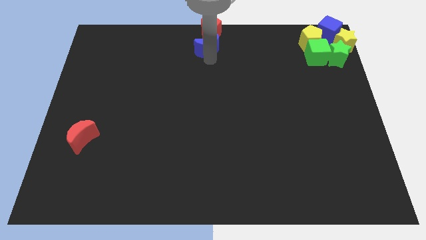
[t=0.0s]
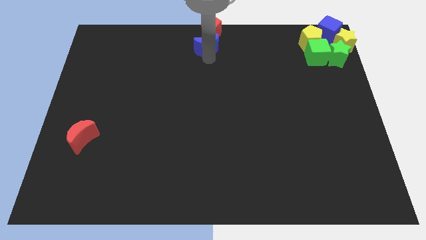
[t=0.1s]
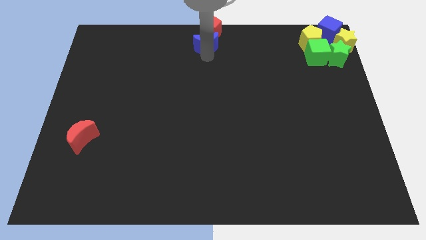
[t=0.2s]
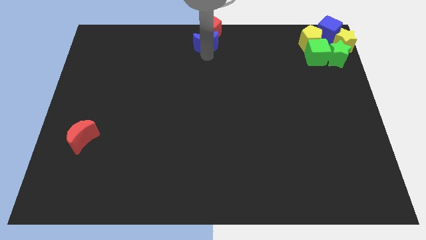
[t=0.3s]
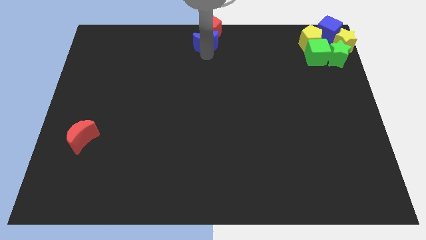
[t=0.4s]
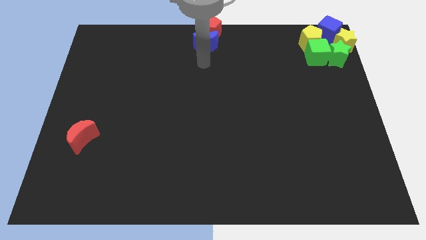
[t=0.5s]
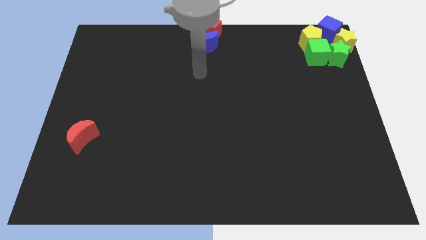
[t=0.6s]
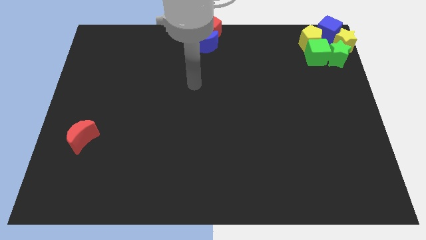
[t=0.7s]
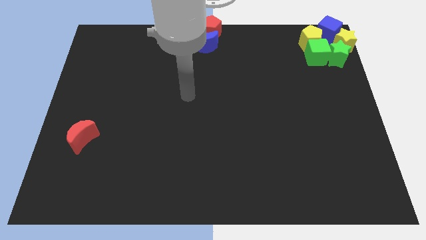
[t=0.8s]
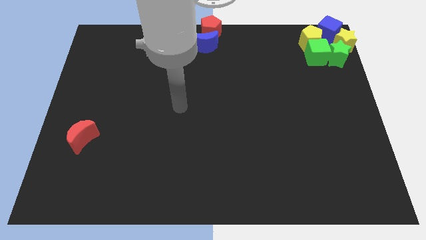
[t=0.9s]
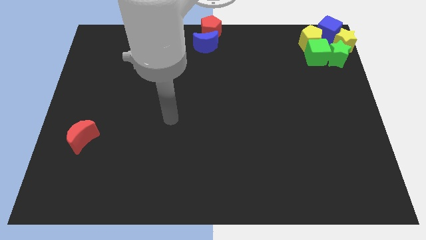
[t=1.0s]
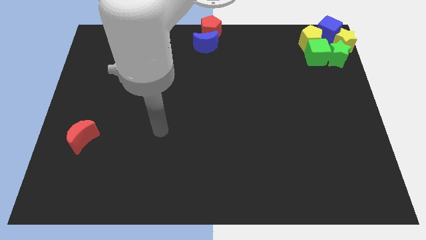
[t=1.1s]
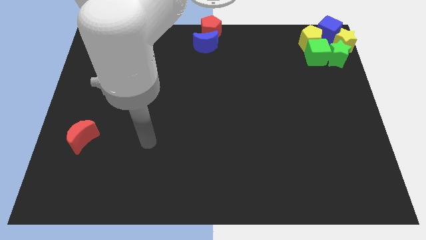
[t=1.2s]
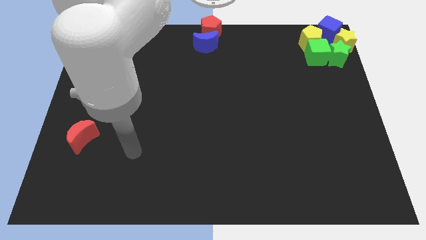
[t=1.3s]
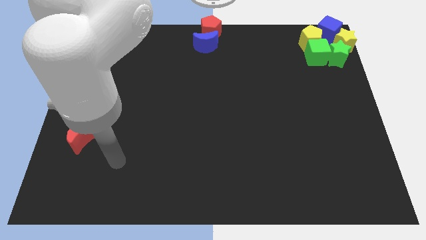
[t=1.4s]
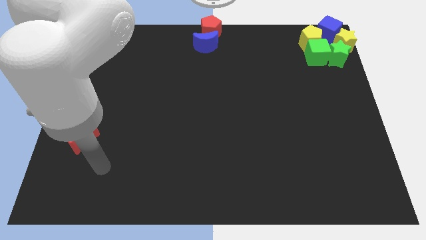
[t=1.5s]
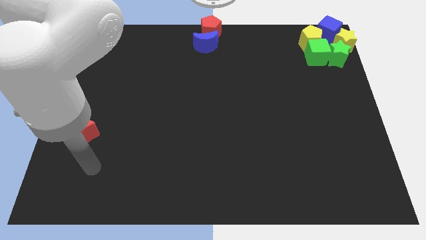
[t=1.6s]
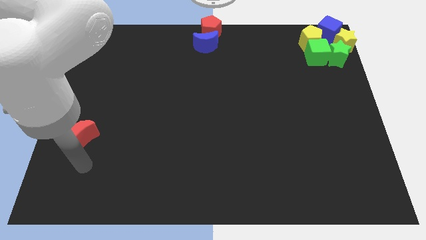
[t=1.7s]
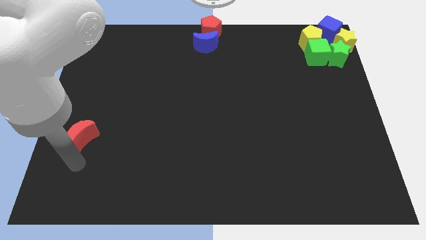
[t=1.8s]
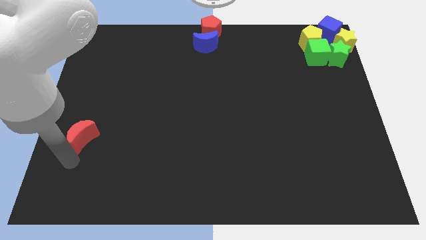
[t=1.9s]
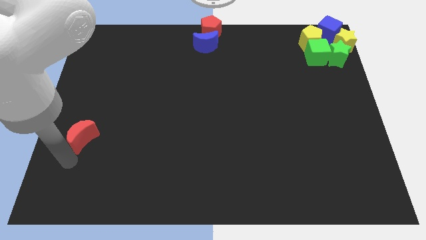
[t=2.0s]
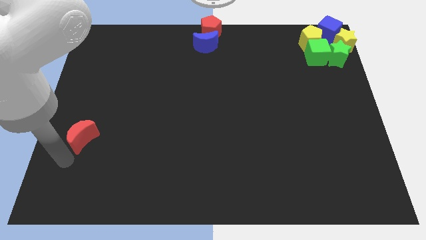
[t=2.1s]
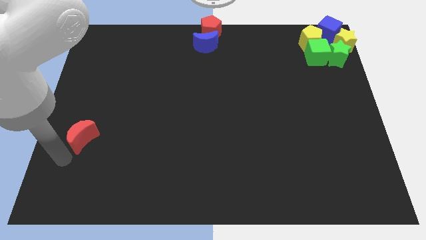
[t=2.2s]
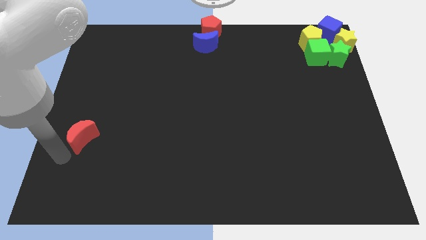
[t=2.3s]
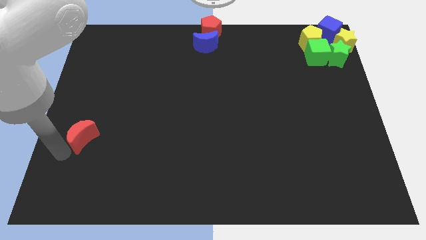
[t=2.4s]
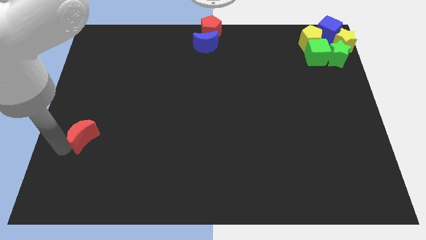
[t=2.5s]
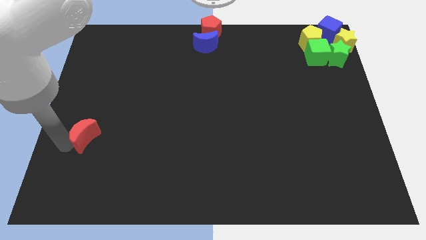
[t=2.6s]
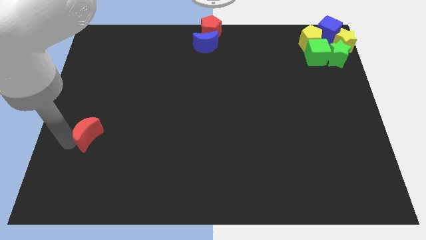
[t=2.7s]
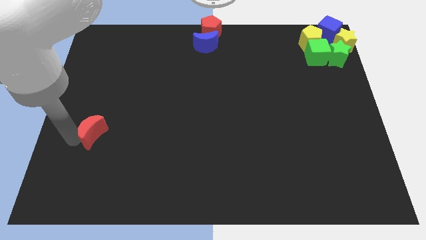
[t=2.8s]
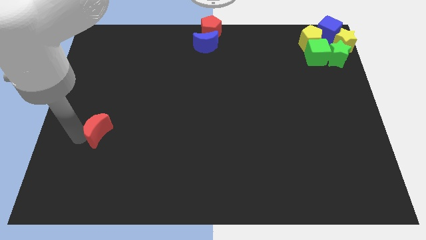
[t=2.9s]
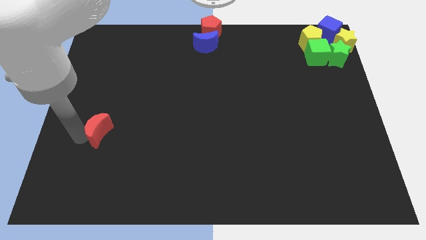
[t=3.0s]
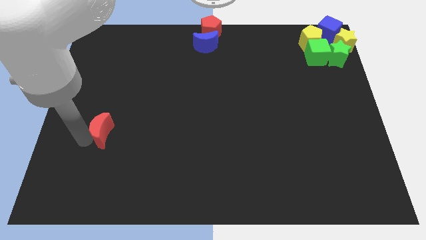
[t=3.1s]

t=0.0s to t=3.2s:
move the red moon slightly towards right

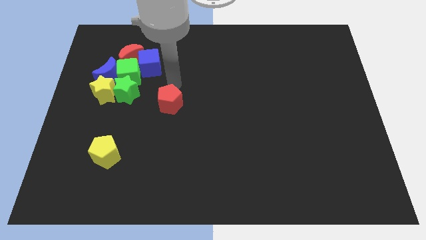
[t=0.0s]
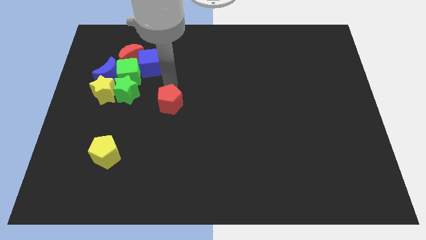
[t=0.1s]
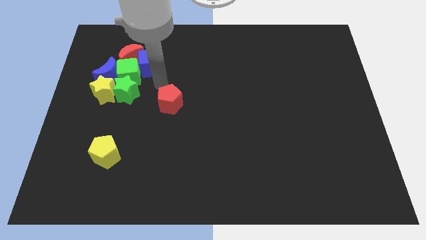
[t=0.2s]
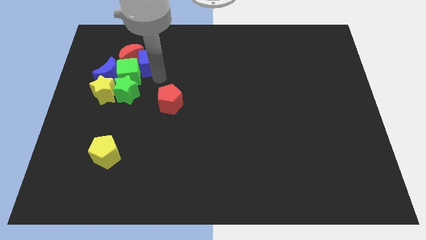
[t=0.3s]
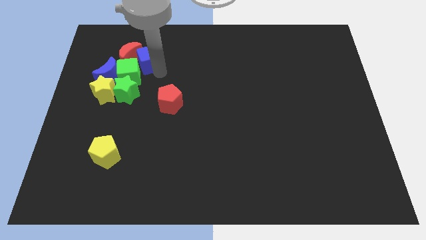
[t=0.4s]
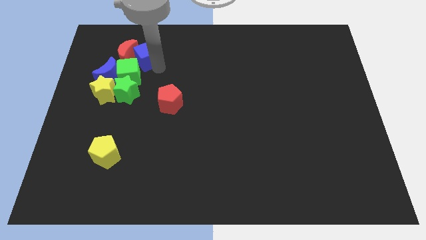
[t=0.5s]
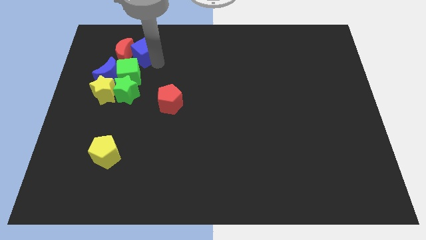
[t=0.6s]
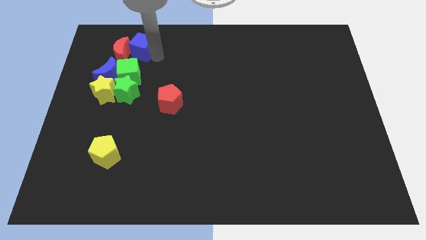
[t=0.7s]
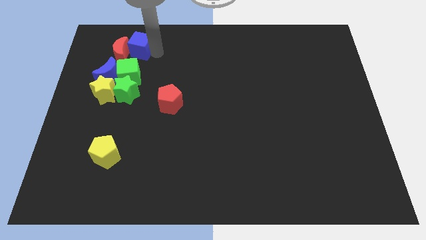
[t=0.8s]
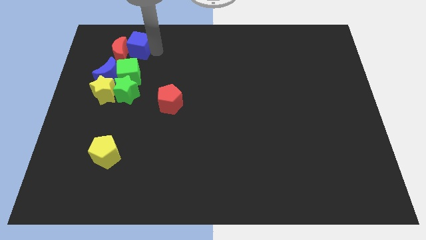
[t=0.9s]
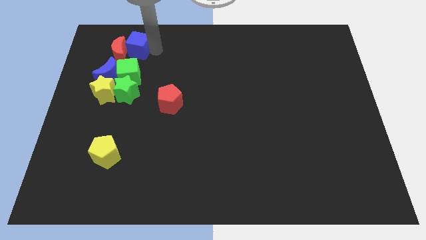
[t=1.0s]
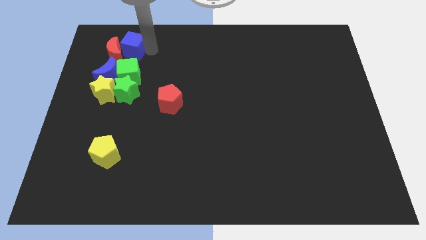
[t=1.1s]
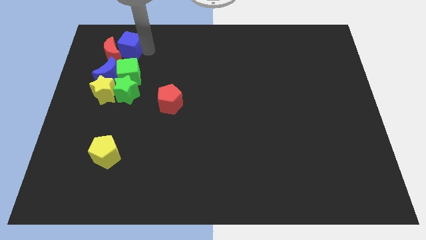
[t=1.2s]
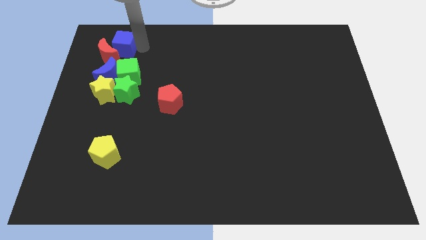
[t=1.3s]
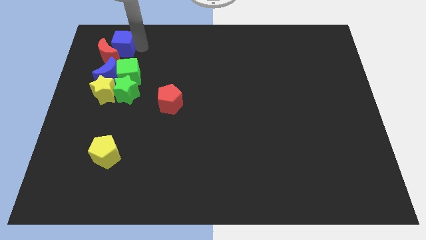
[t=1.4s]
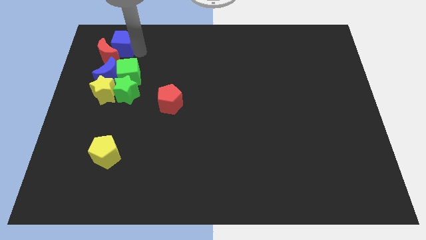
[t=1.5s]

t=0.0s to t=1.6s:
move blue cube to the top of red moon

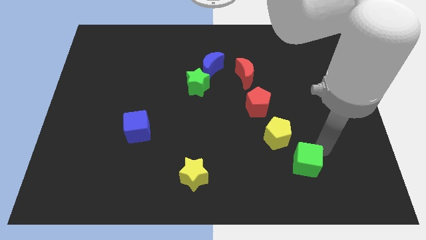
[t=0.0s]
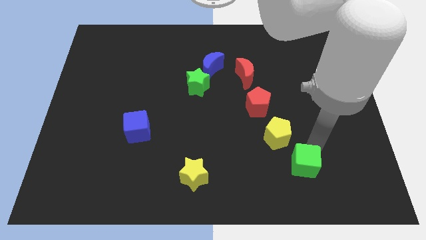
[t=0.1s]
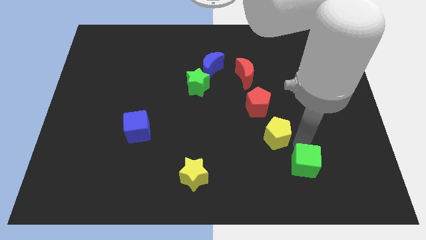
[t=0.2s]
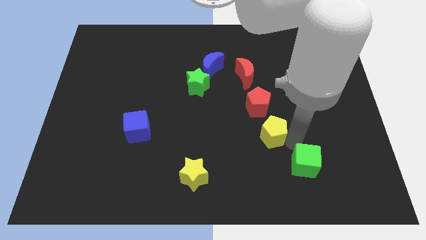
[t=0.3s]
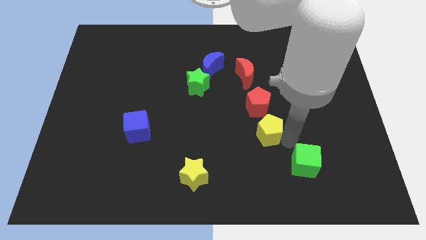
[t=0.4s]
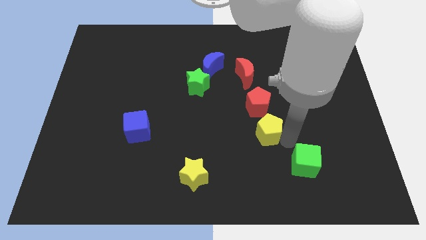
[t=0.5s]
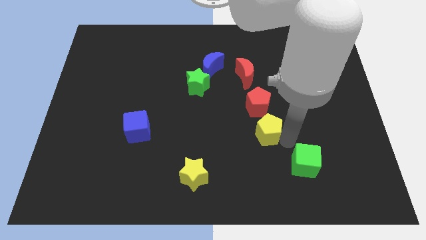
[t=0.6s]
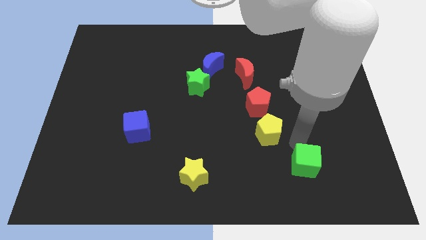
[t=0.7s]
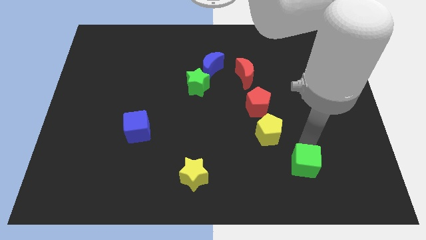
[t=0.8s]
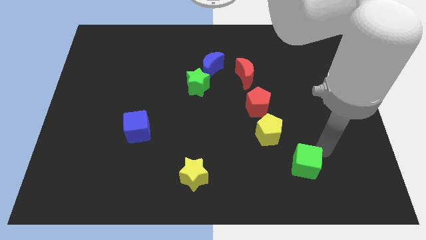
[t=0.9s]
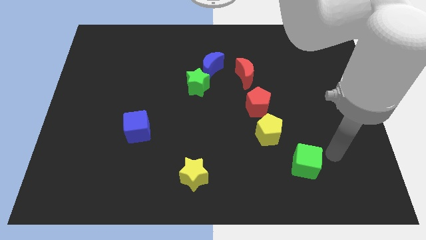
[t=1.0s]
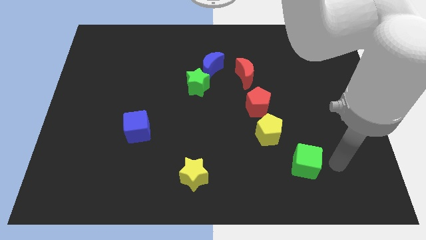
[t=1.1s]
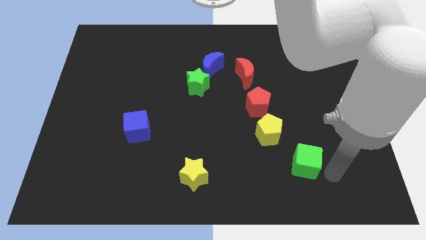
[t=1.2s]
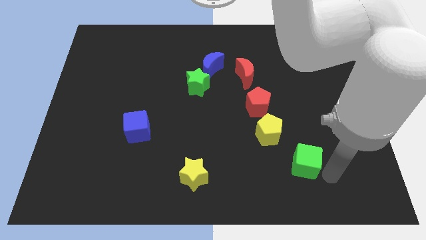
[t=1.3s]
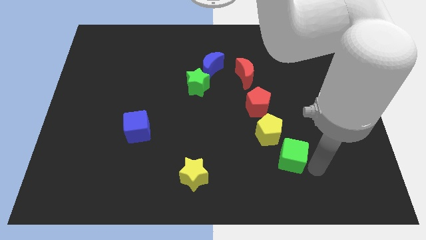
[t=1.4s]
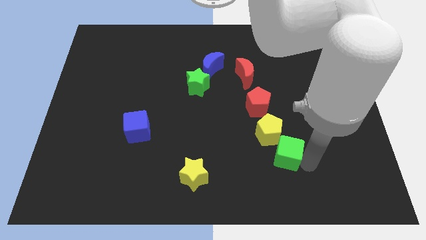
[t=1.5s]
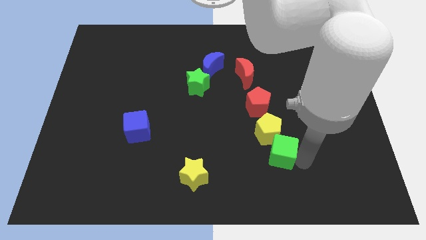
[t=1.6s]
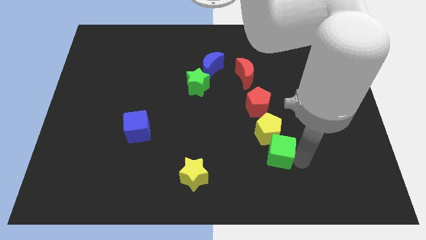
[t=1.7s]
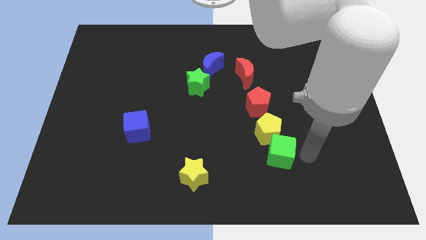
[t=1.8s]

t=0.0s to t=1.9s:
push the green cube into the yellow pentagon

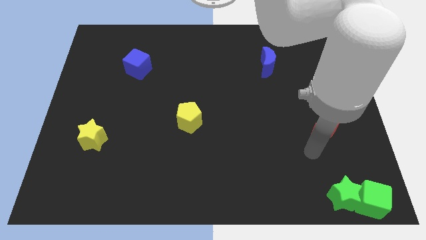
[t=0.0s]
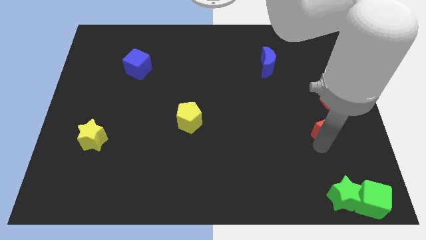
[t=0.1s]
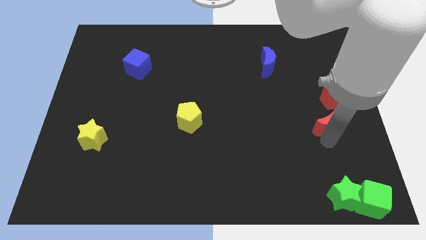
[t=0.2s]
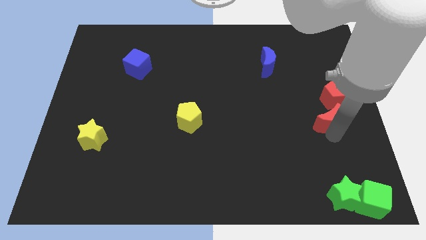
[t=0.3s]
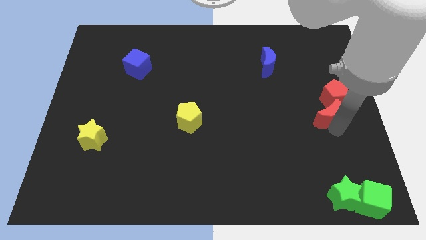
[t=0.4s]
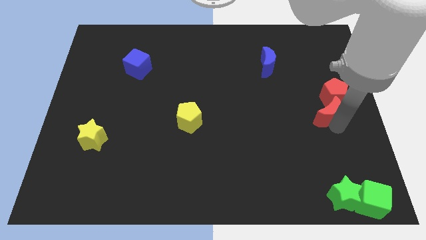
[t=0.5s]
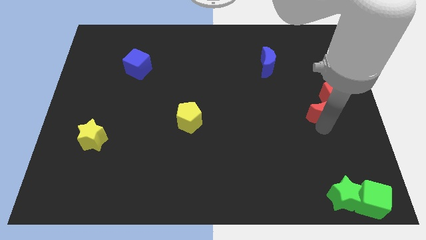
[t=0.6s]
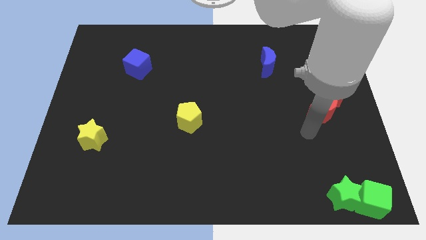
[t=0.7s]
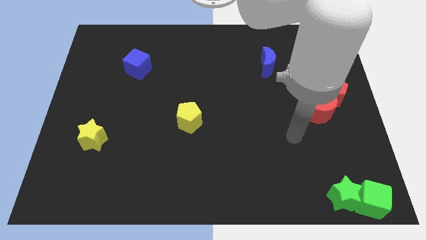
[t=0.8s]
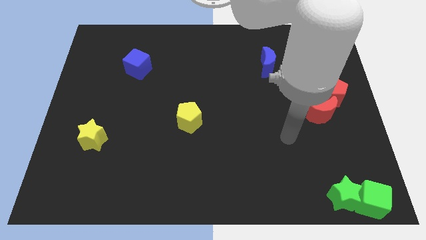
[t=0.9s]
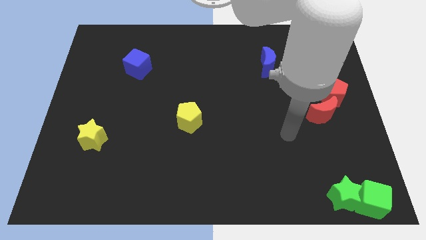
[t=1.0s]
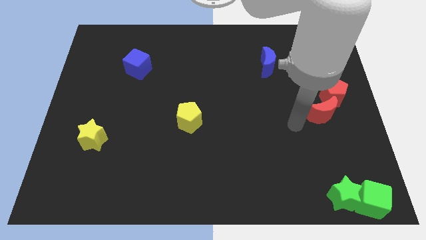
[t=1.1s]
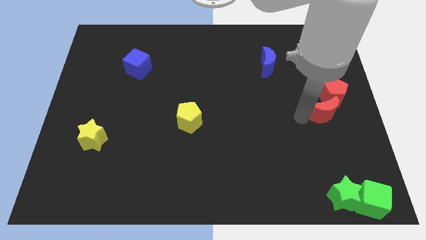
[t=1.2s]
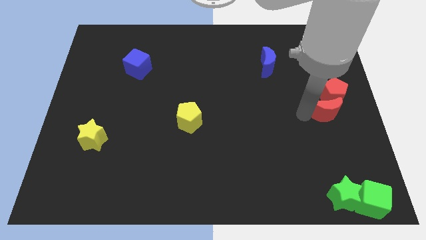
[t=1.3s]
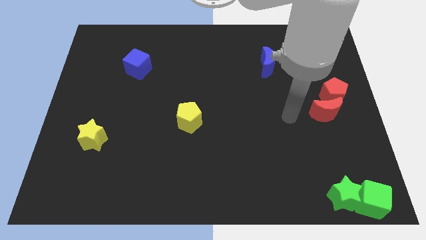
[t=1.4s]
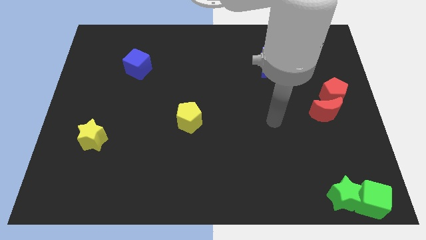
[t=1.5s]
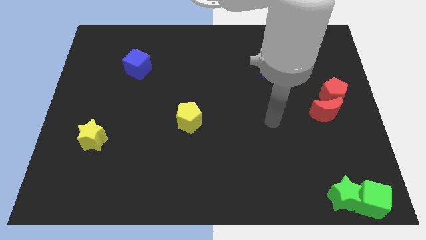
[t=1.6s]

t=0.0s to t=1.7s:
push the red moon at the bottom of red pentagon

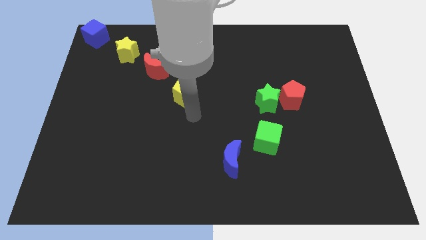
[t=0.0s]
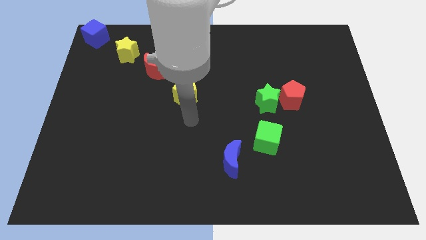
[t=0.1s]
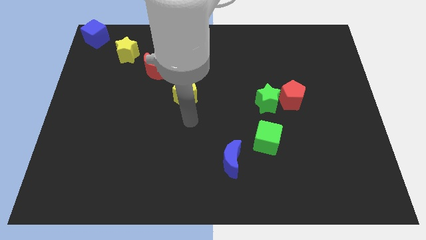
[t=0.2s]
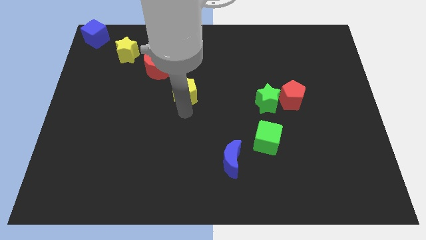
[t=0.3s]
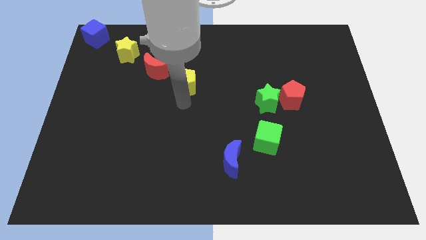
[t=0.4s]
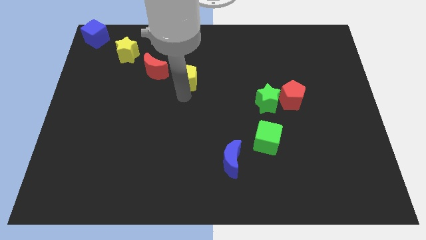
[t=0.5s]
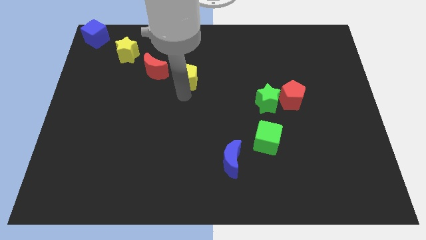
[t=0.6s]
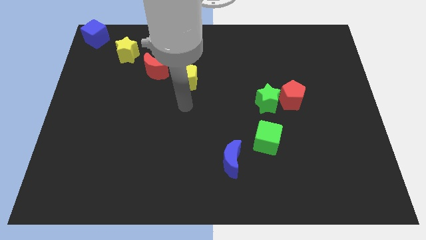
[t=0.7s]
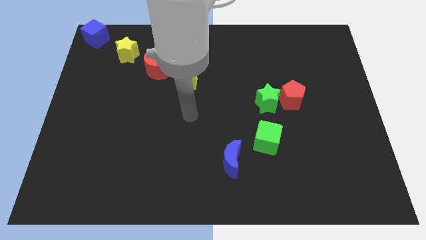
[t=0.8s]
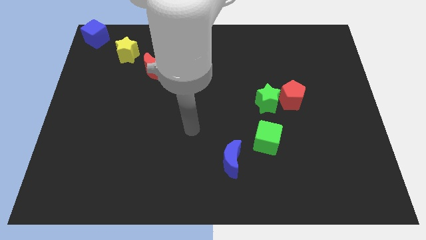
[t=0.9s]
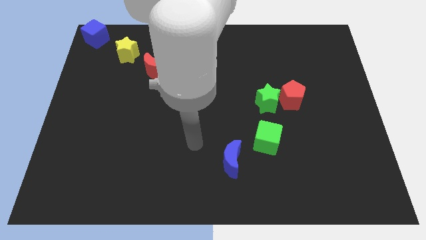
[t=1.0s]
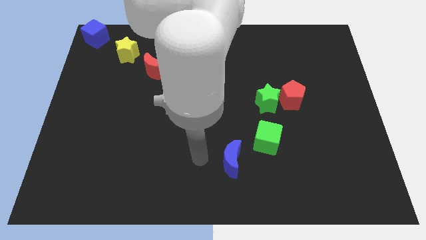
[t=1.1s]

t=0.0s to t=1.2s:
move yellow pentagon to the bottom of the red crescent
